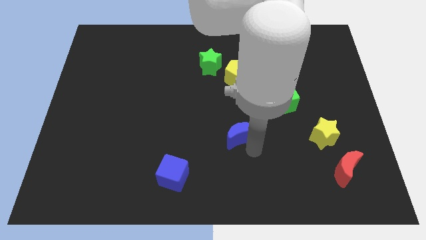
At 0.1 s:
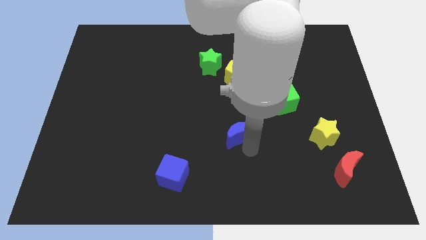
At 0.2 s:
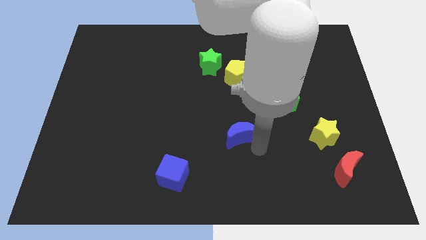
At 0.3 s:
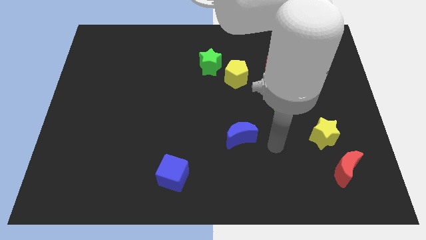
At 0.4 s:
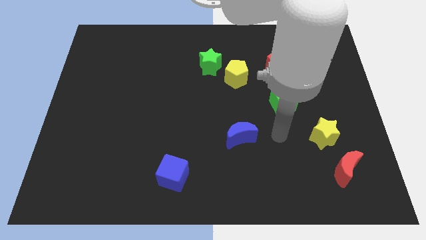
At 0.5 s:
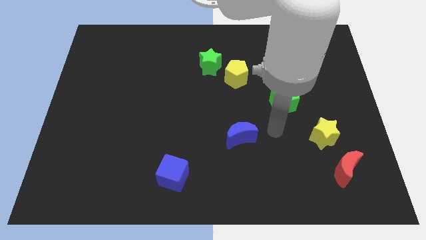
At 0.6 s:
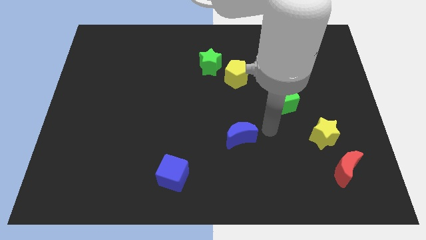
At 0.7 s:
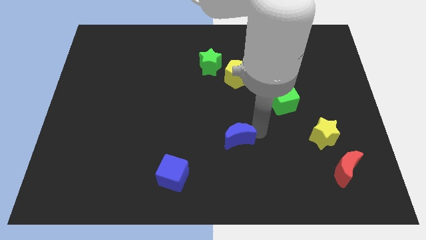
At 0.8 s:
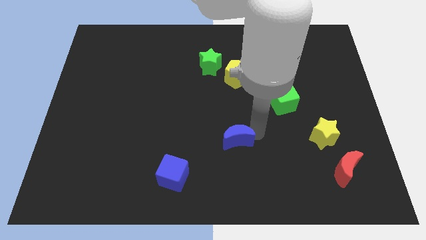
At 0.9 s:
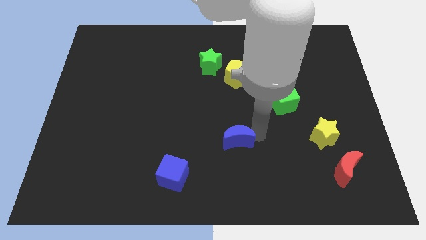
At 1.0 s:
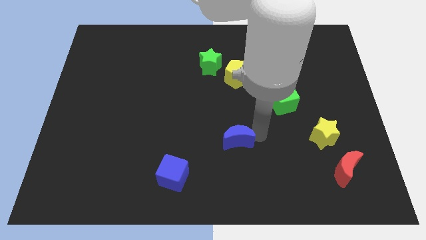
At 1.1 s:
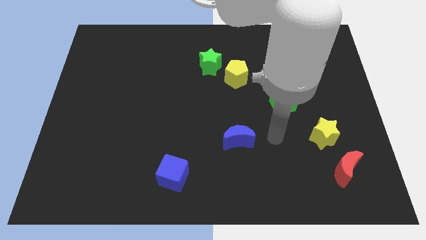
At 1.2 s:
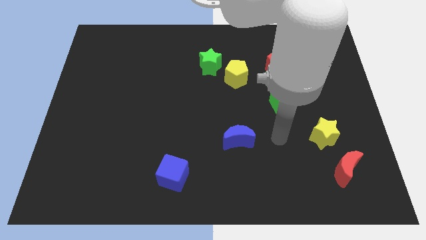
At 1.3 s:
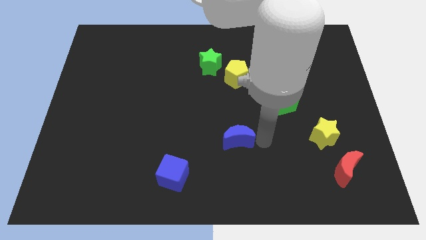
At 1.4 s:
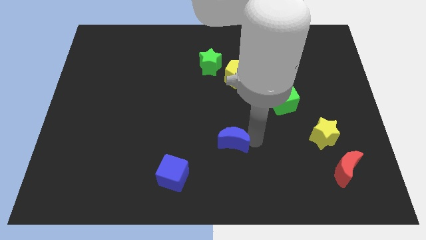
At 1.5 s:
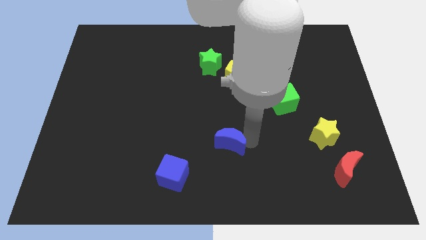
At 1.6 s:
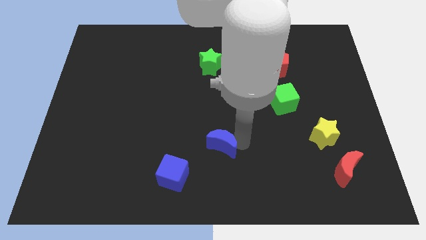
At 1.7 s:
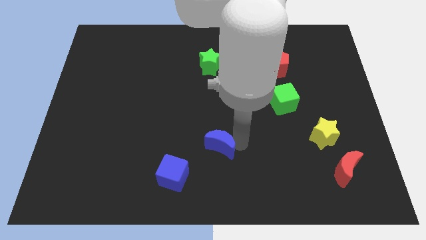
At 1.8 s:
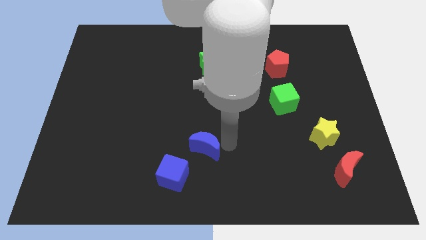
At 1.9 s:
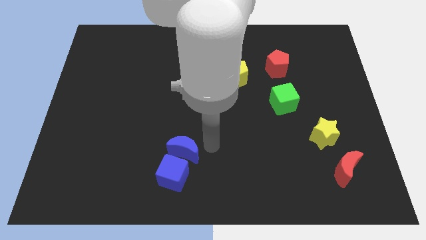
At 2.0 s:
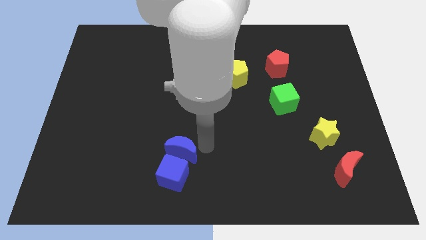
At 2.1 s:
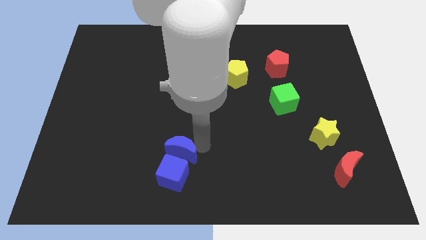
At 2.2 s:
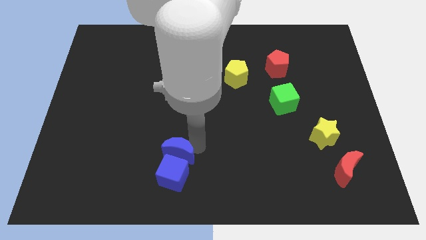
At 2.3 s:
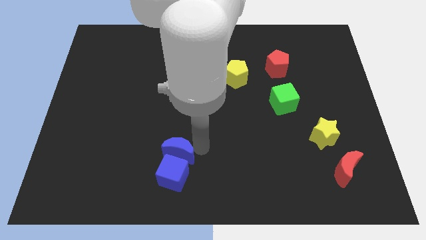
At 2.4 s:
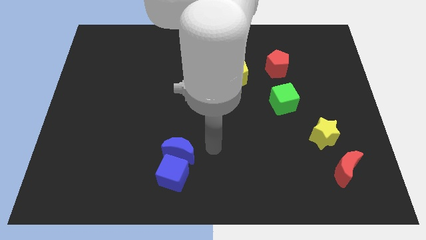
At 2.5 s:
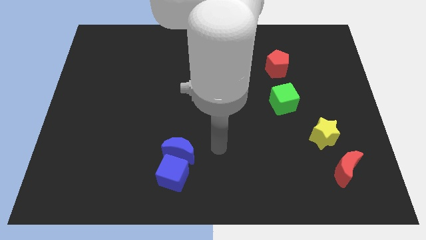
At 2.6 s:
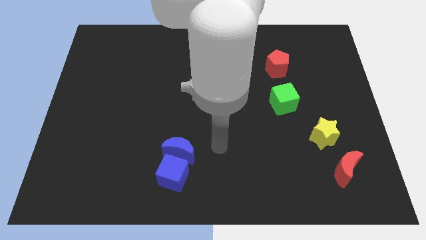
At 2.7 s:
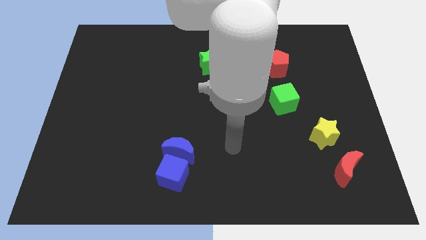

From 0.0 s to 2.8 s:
move the blue crescent to the top of the blue cube

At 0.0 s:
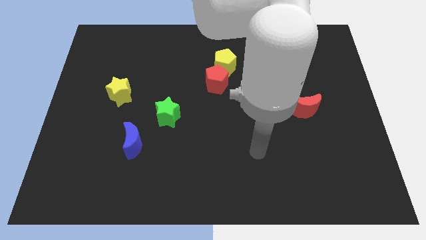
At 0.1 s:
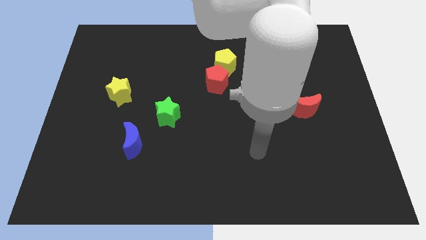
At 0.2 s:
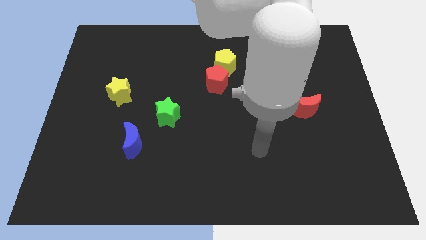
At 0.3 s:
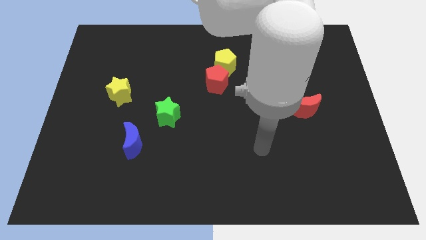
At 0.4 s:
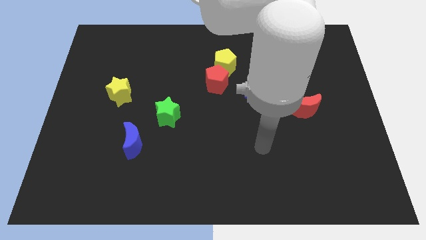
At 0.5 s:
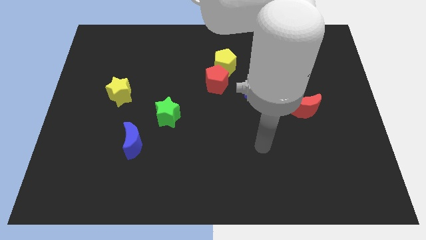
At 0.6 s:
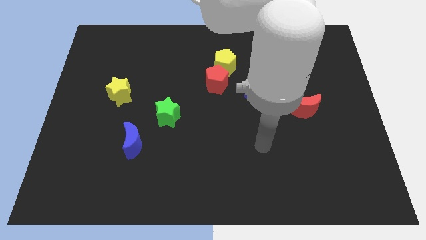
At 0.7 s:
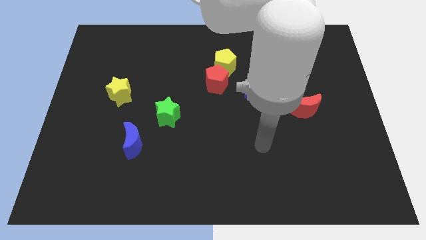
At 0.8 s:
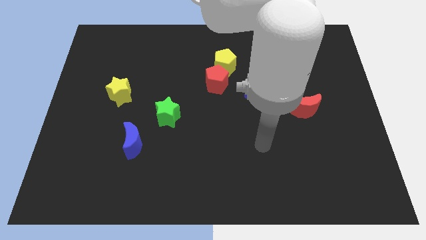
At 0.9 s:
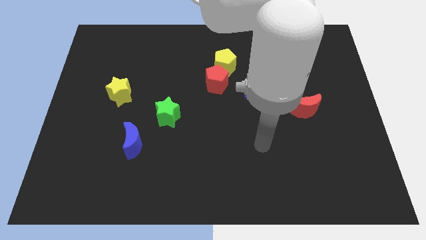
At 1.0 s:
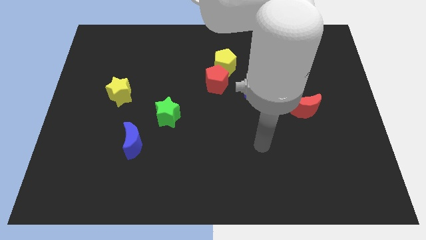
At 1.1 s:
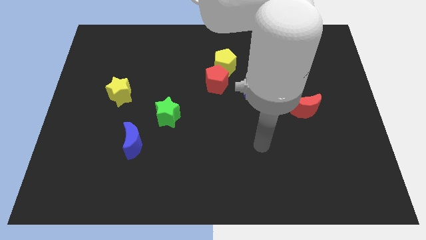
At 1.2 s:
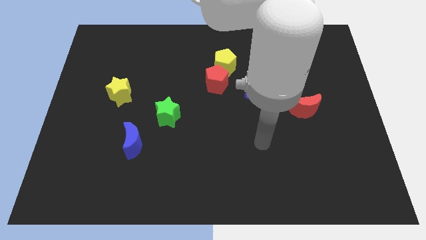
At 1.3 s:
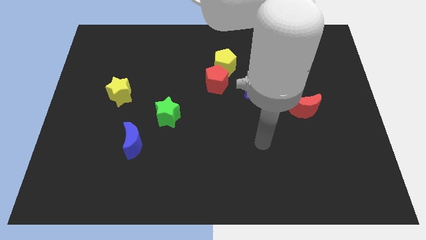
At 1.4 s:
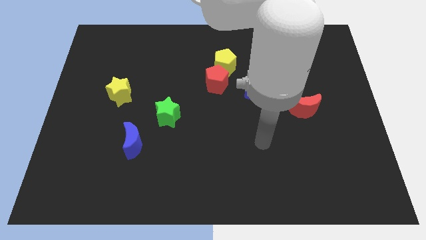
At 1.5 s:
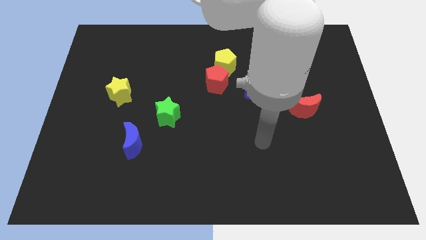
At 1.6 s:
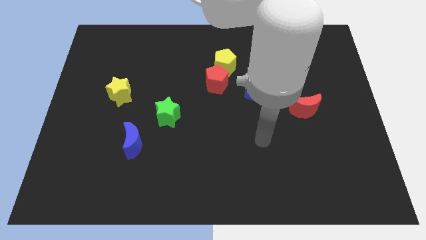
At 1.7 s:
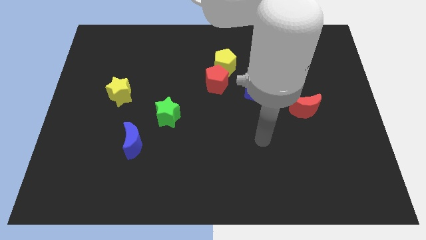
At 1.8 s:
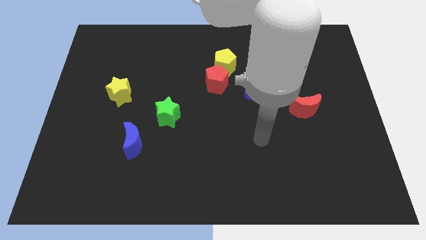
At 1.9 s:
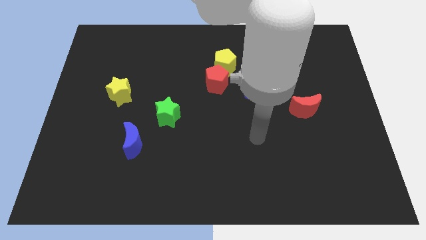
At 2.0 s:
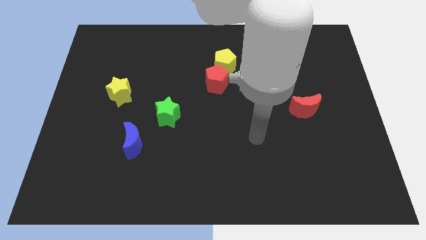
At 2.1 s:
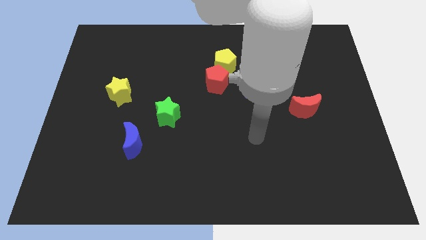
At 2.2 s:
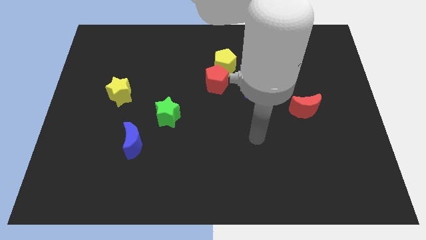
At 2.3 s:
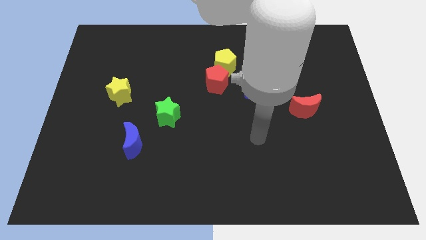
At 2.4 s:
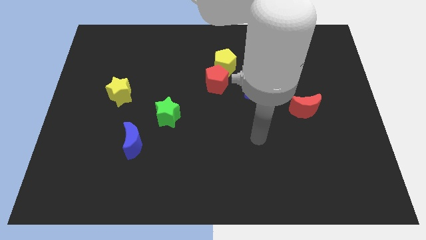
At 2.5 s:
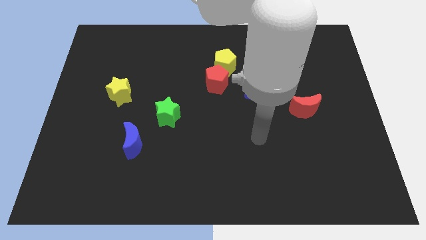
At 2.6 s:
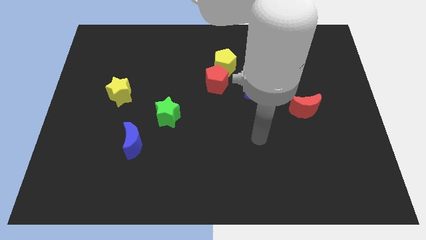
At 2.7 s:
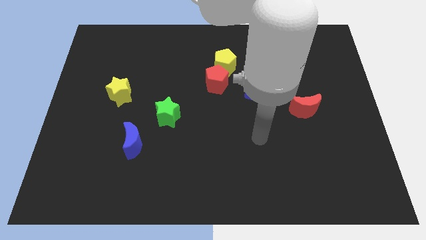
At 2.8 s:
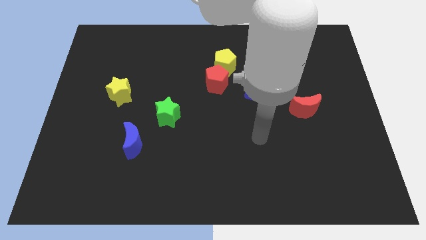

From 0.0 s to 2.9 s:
place the arm diagonally to the red moon

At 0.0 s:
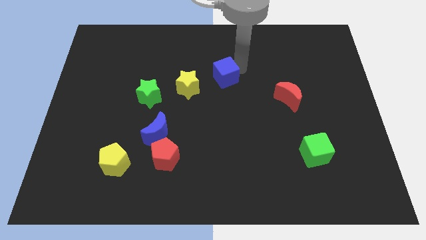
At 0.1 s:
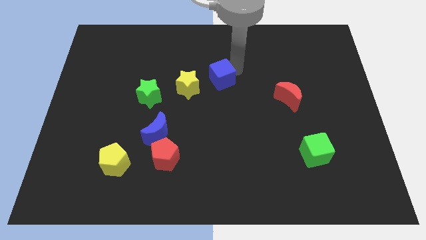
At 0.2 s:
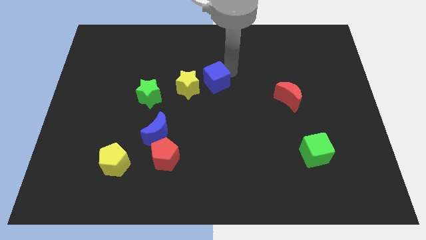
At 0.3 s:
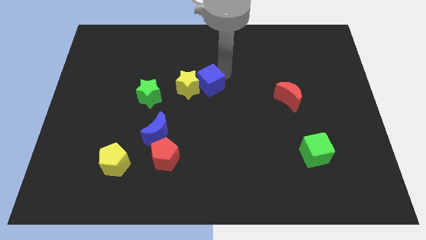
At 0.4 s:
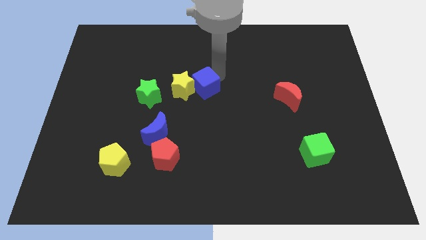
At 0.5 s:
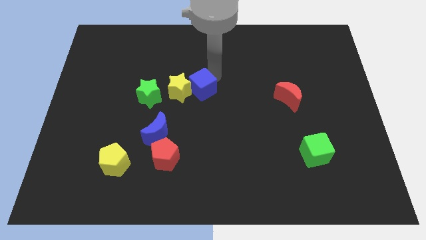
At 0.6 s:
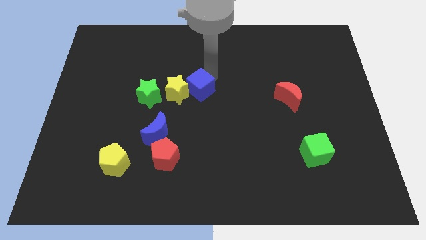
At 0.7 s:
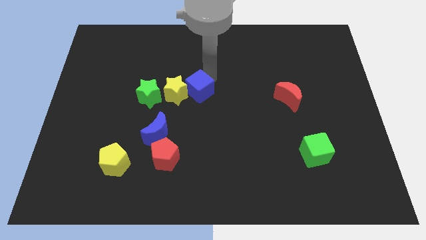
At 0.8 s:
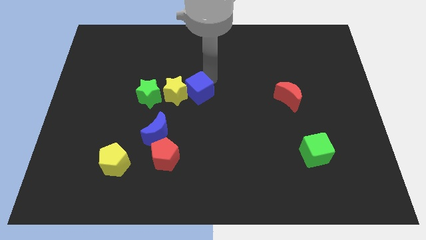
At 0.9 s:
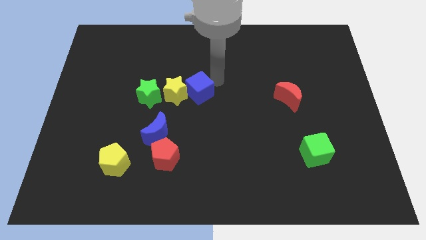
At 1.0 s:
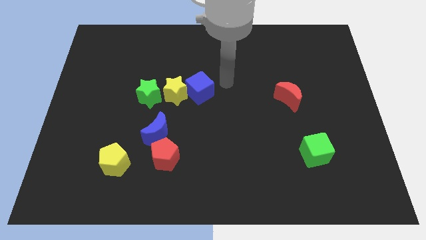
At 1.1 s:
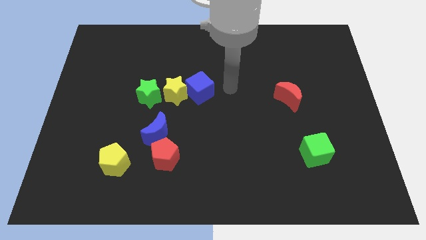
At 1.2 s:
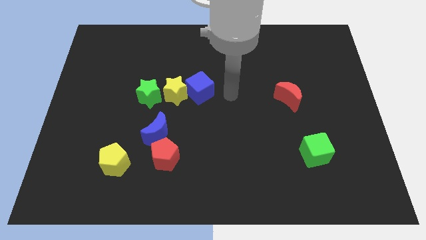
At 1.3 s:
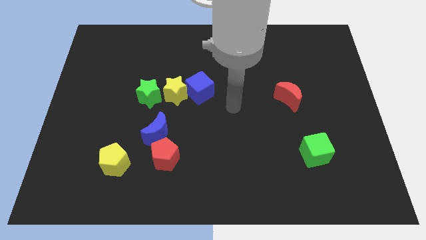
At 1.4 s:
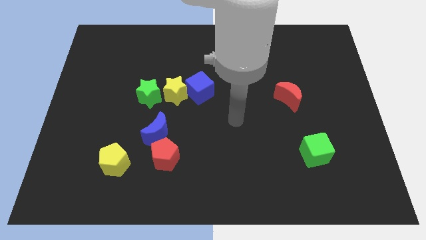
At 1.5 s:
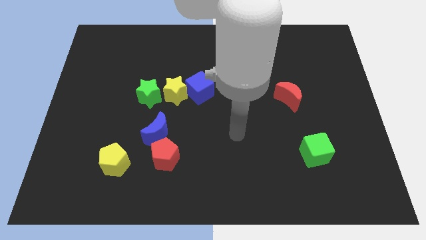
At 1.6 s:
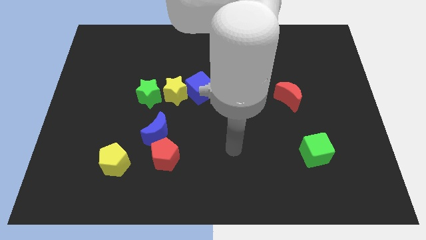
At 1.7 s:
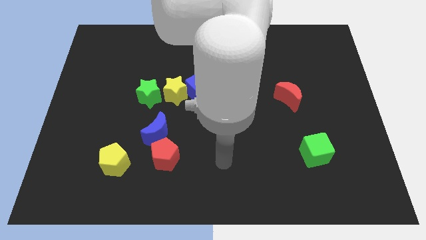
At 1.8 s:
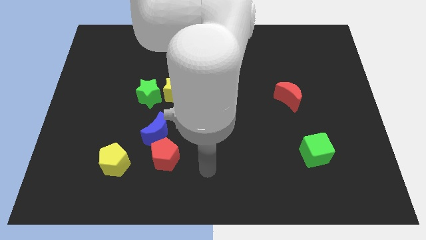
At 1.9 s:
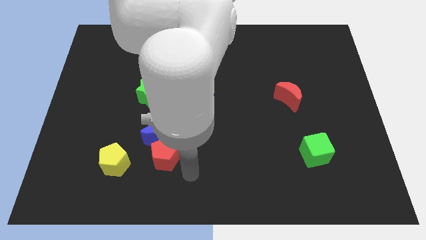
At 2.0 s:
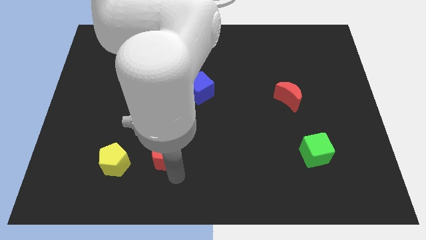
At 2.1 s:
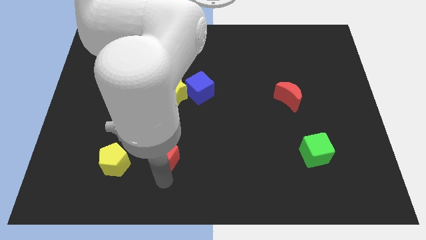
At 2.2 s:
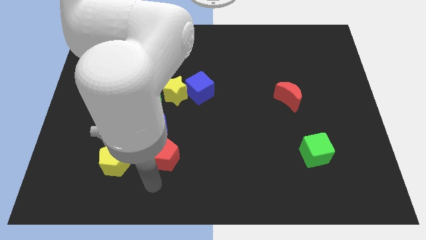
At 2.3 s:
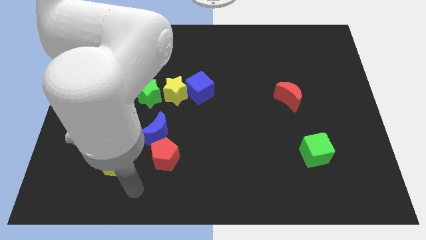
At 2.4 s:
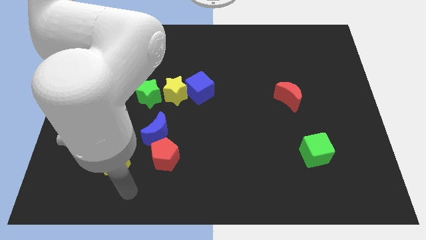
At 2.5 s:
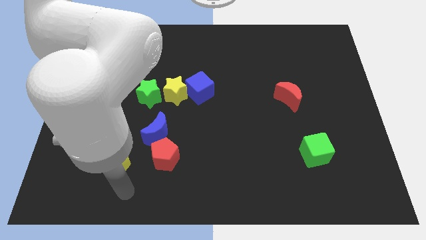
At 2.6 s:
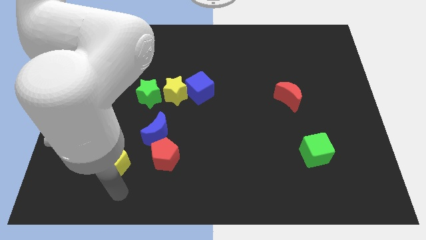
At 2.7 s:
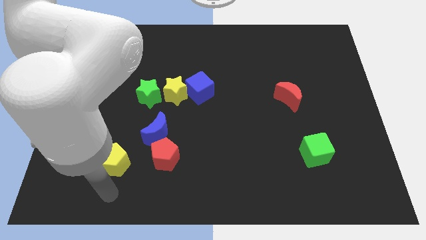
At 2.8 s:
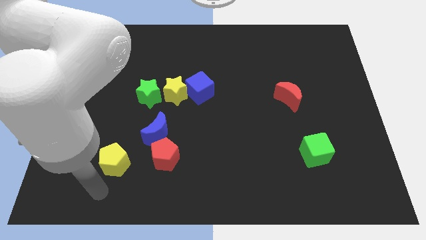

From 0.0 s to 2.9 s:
place blue cube to the right of yellow star

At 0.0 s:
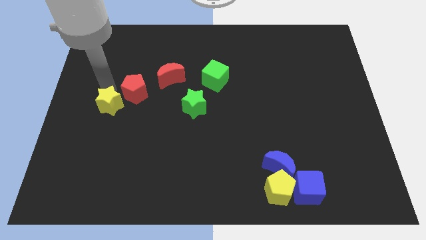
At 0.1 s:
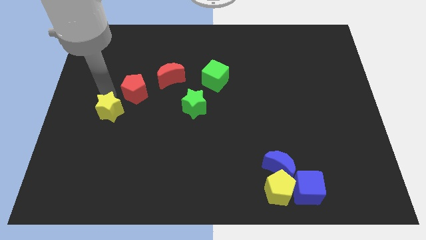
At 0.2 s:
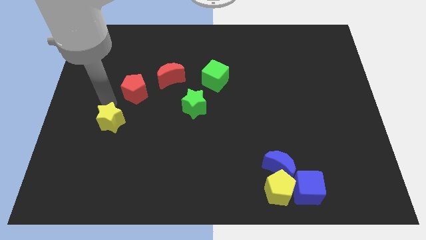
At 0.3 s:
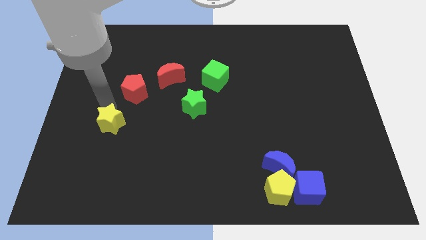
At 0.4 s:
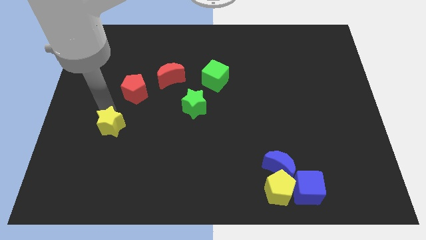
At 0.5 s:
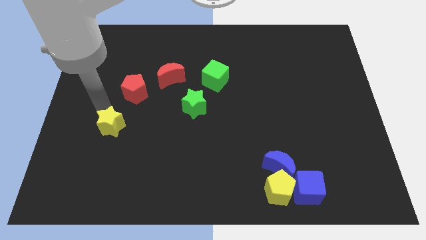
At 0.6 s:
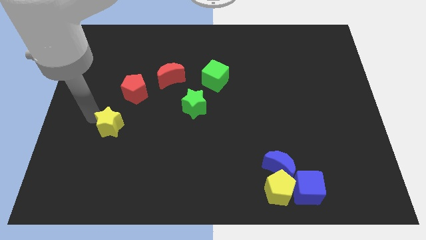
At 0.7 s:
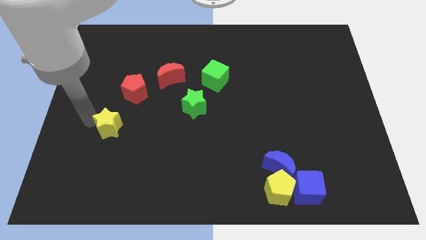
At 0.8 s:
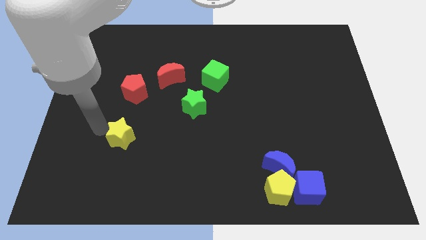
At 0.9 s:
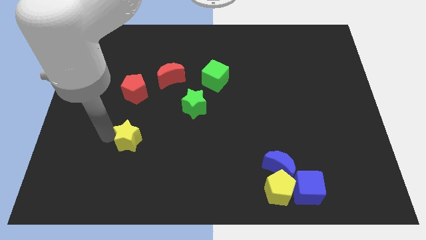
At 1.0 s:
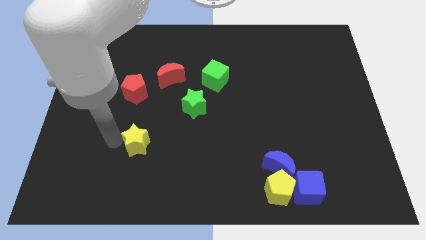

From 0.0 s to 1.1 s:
move the yellow star below the red pentagon
